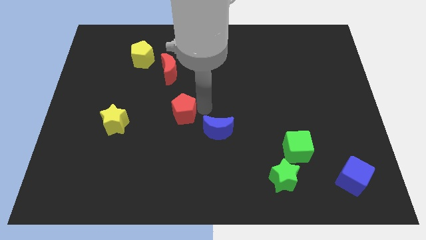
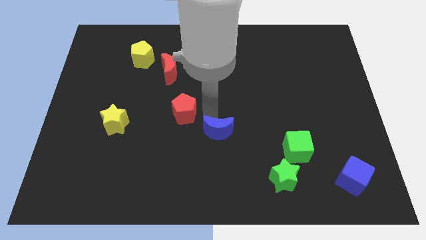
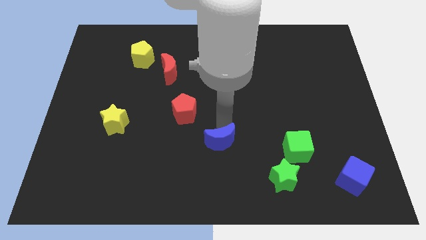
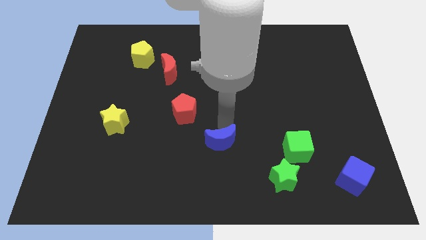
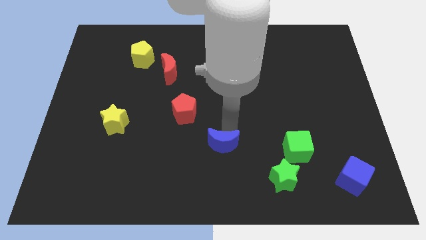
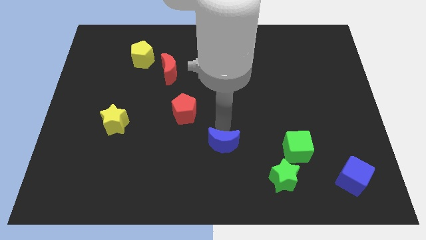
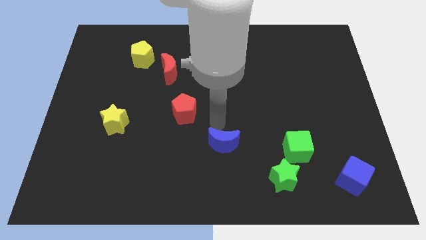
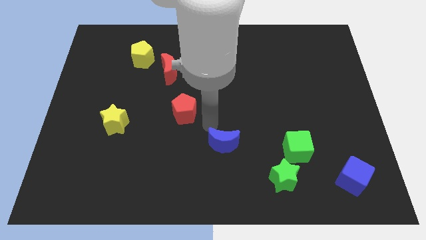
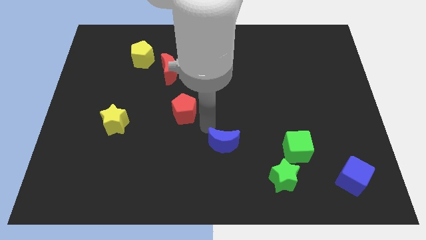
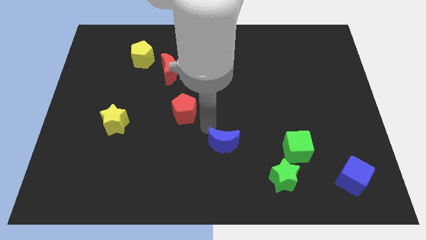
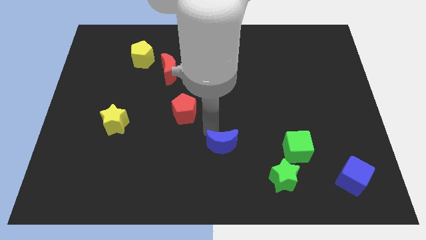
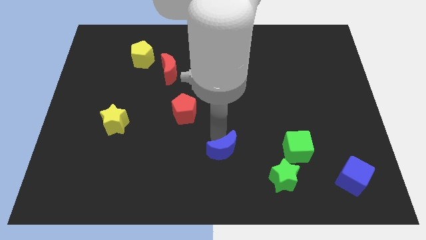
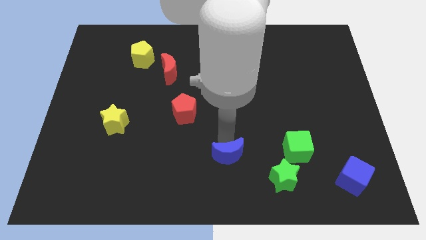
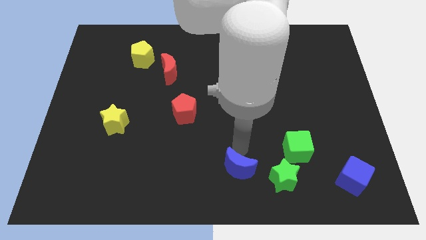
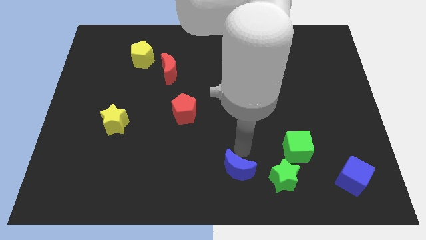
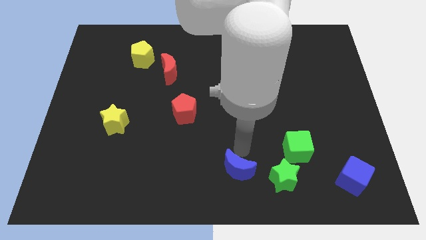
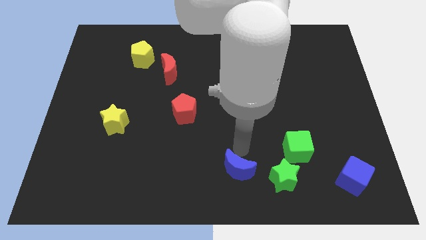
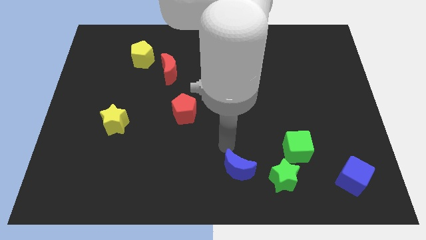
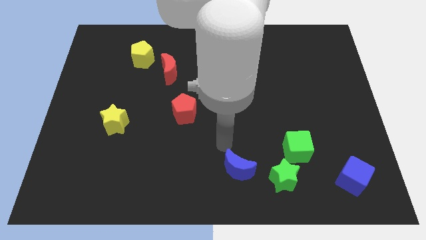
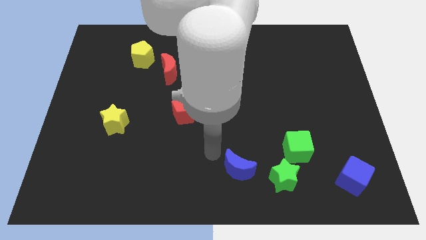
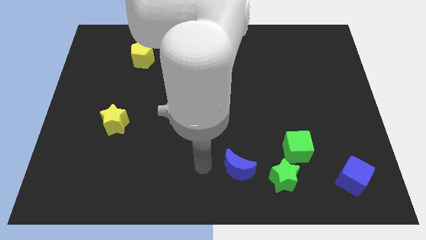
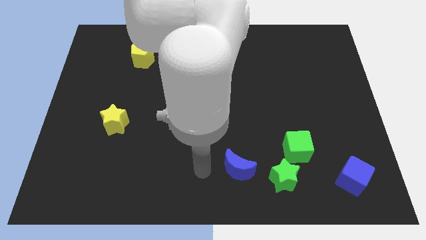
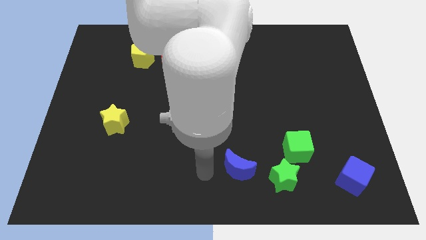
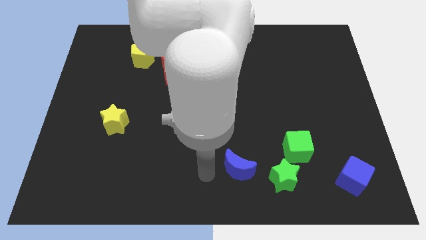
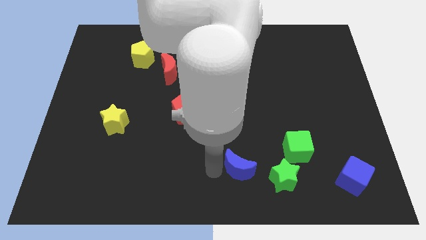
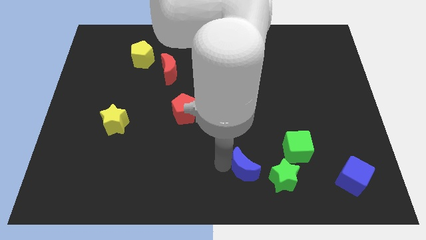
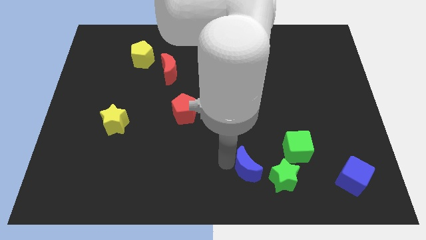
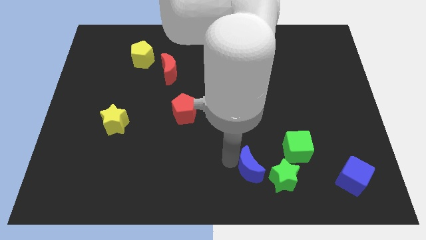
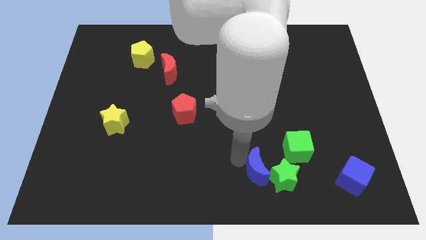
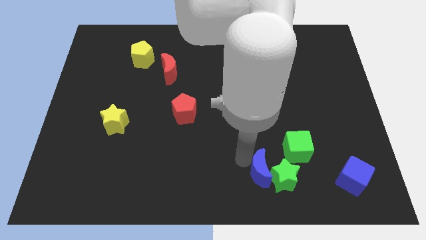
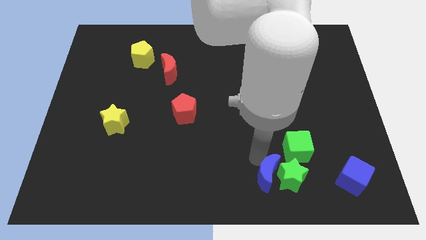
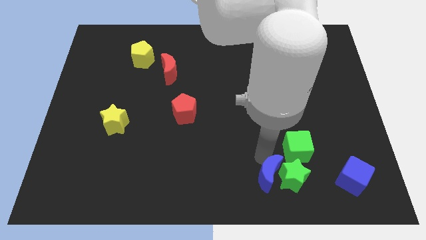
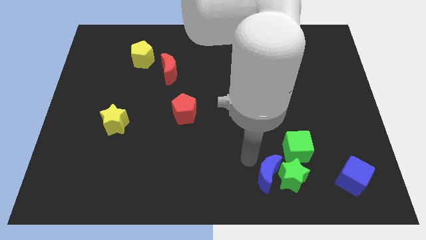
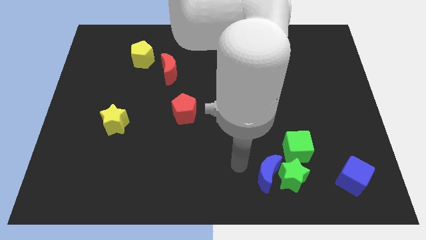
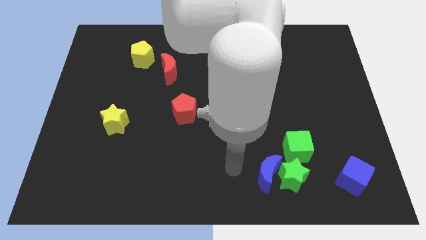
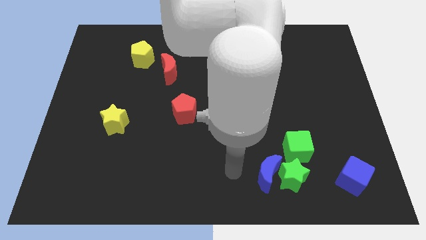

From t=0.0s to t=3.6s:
push the blue crescent into the green star

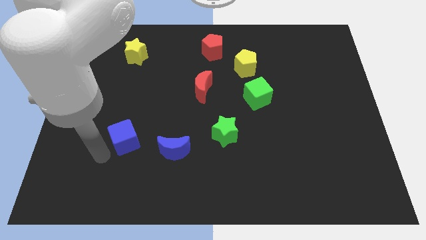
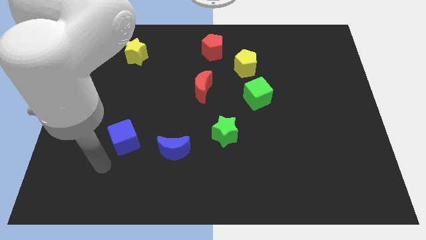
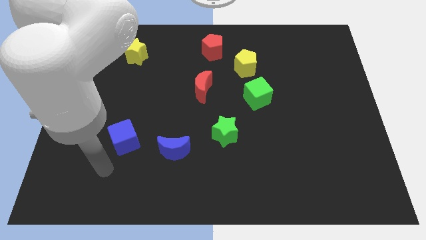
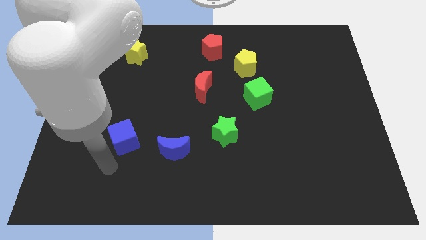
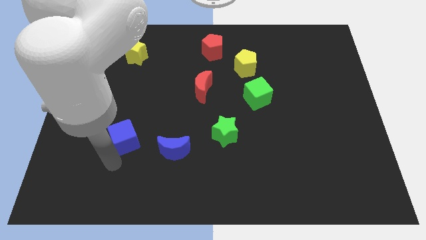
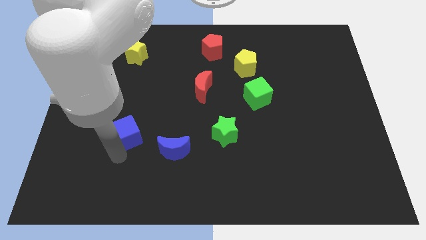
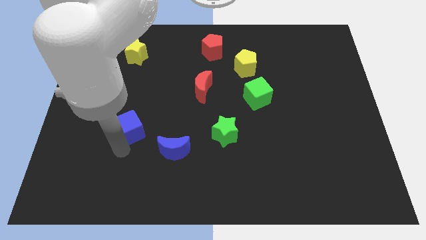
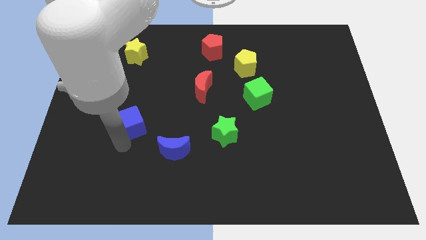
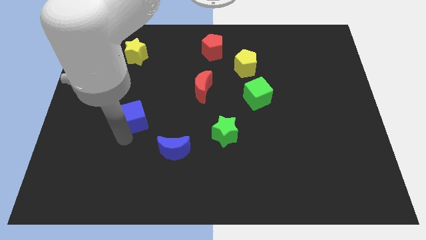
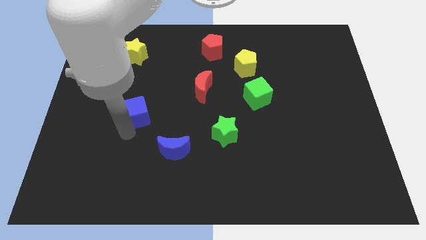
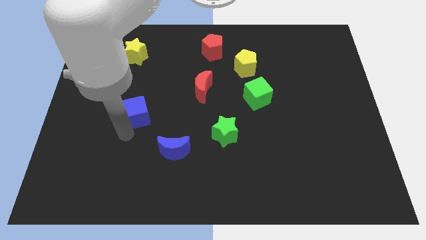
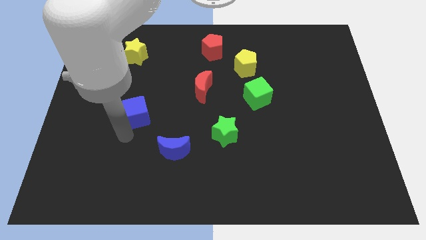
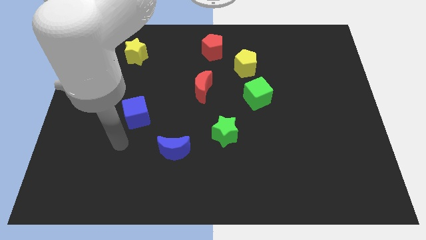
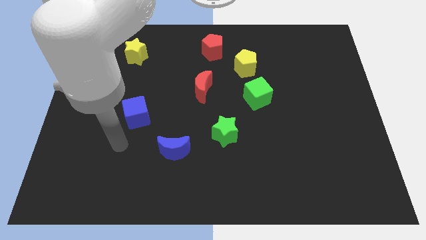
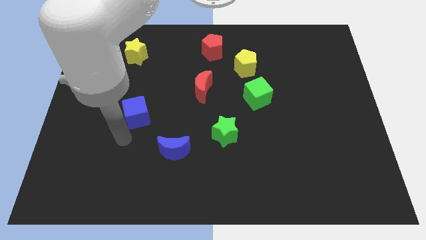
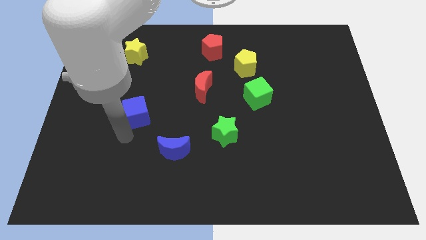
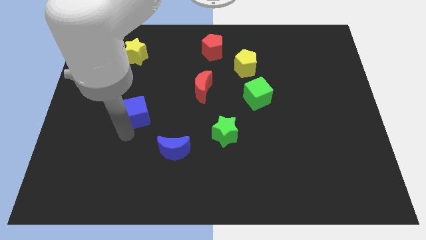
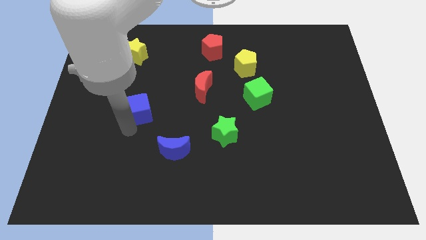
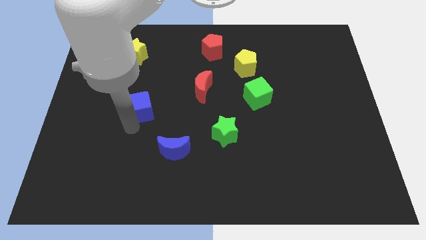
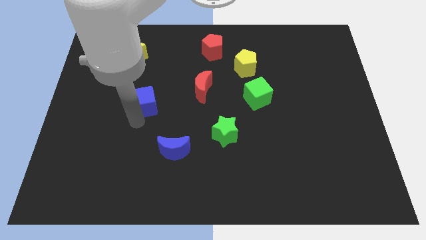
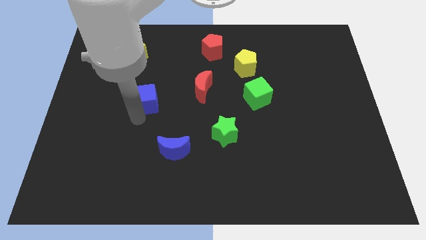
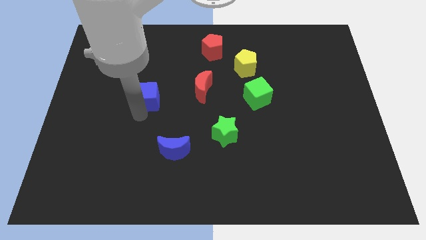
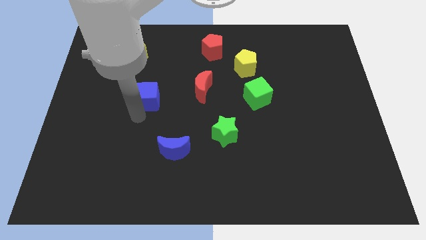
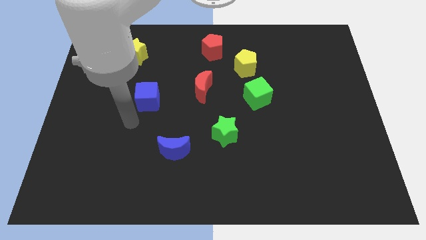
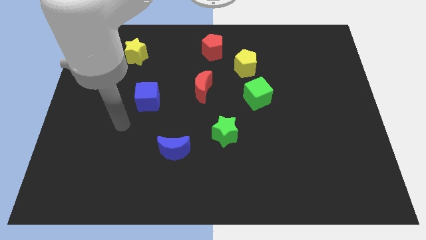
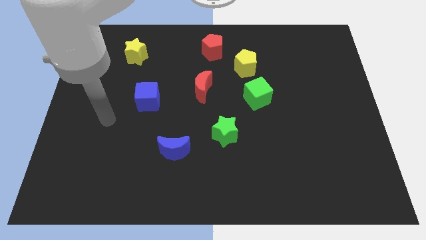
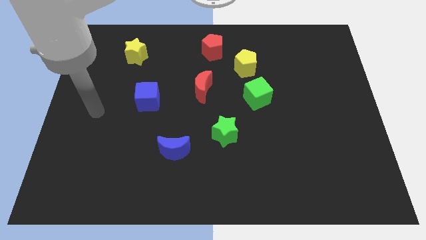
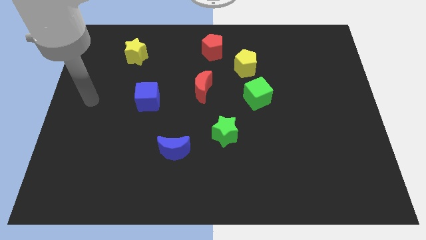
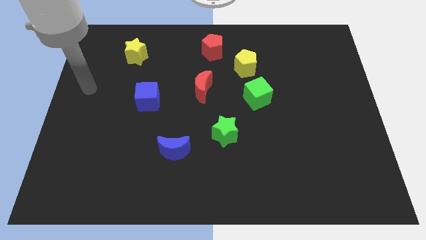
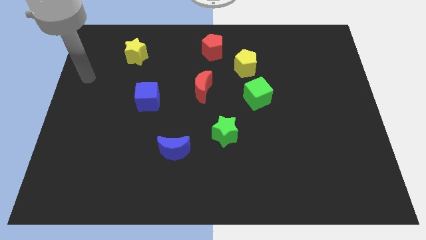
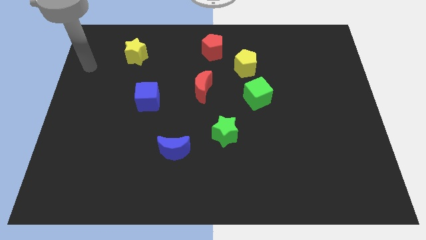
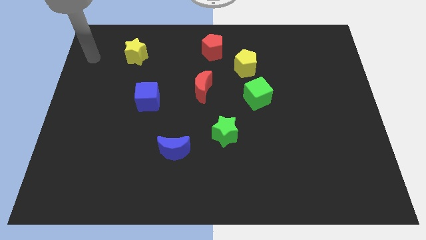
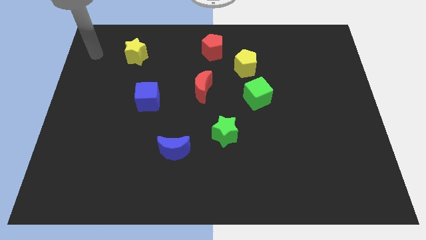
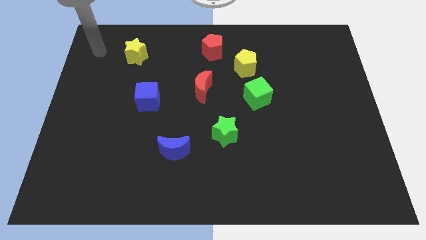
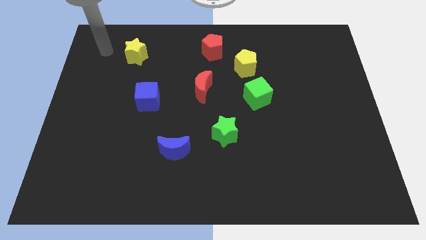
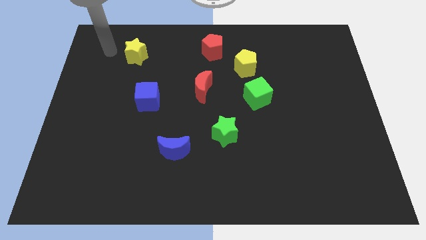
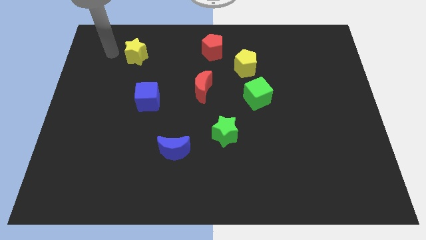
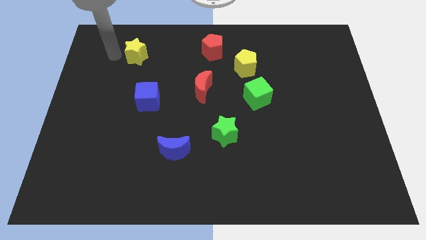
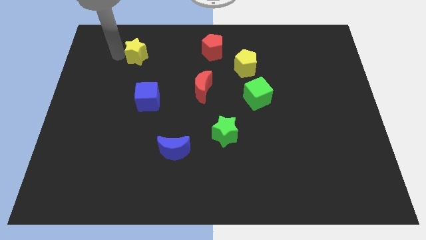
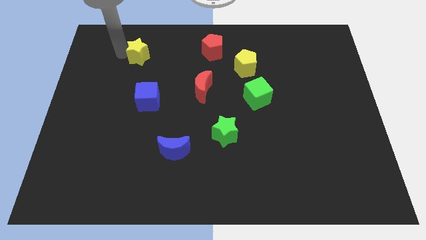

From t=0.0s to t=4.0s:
move the blue cube parallel to the left of the green cube

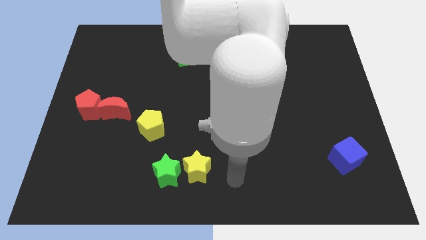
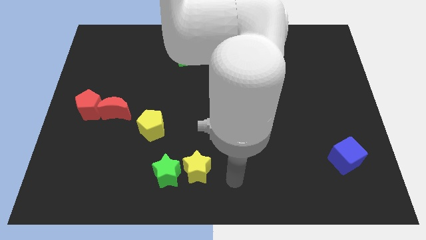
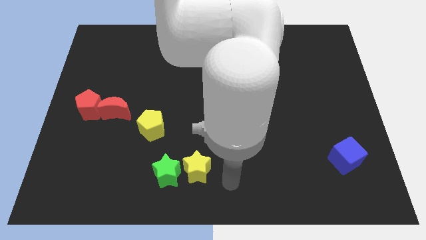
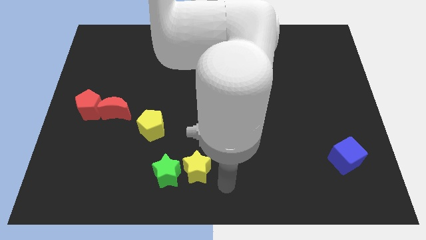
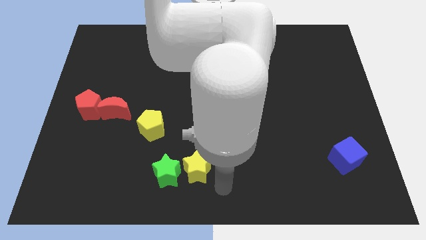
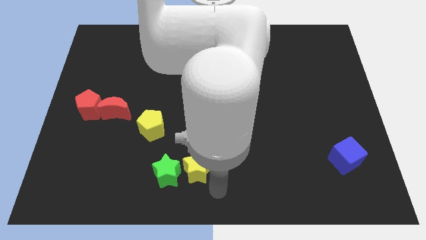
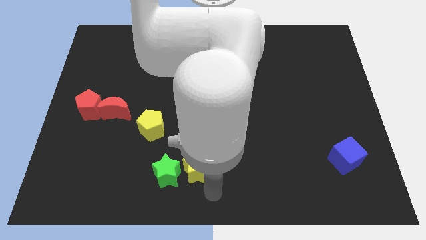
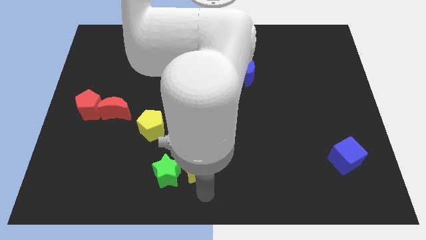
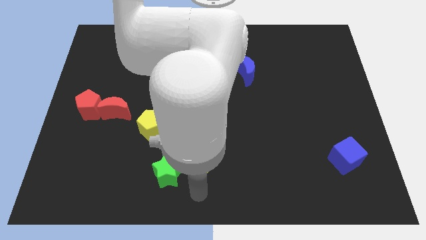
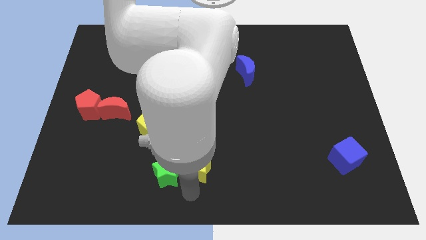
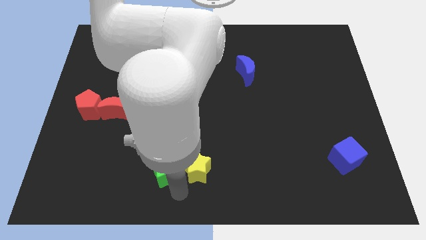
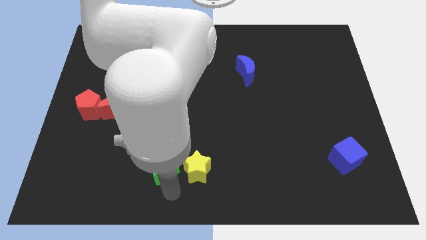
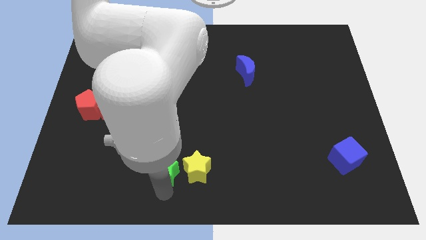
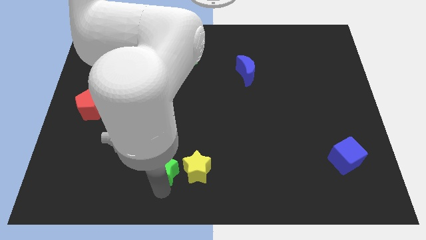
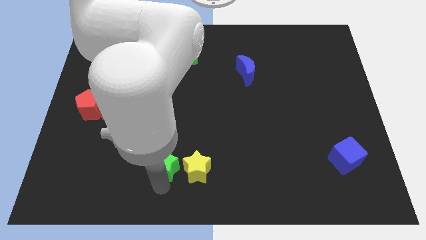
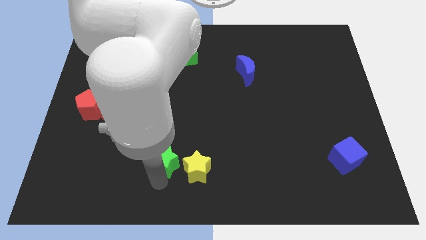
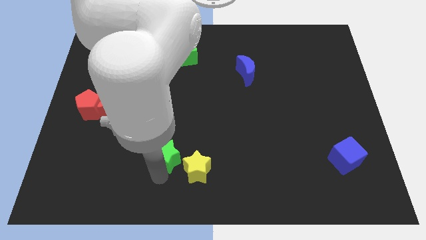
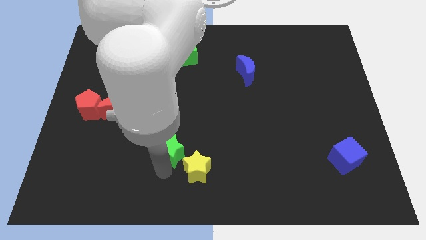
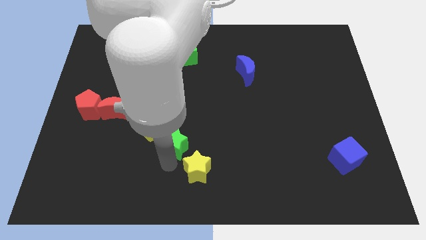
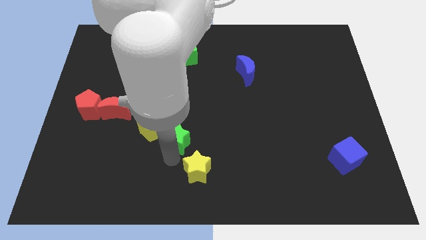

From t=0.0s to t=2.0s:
separate the green star from the yellow star
